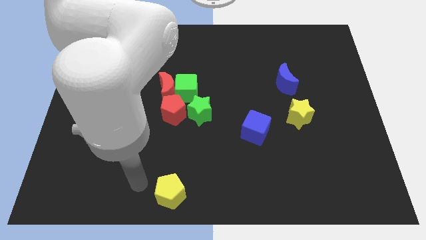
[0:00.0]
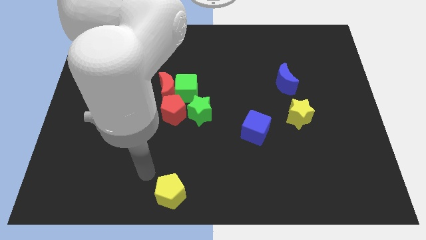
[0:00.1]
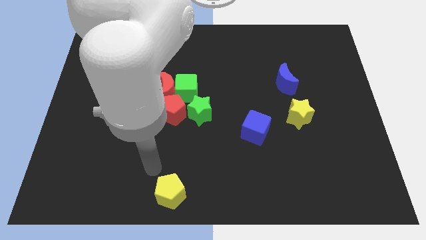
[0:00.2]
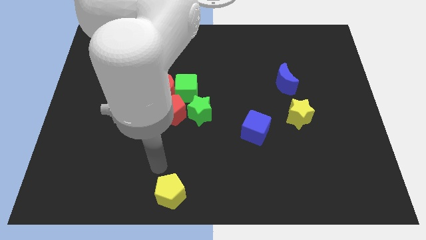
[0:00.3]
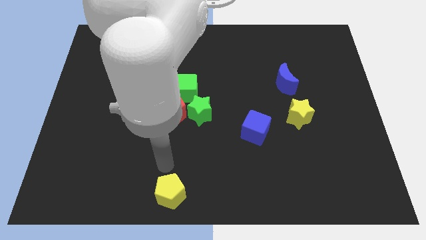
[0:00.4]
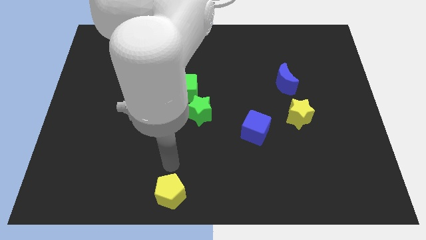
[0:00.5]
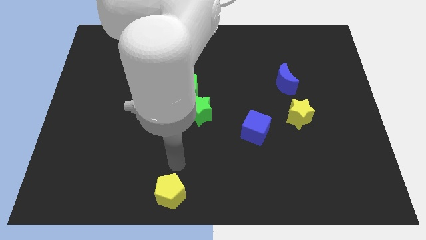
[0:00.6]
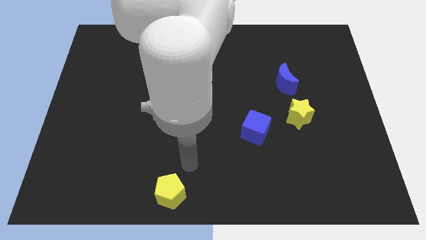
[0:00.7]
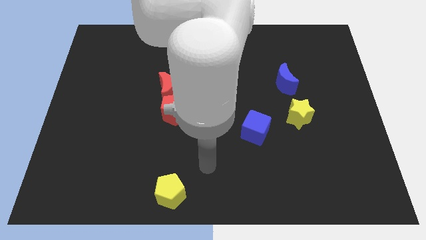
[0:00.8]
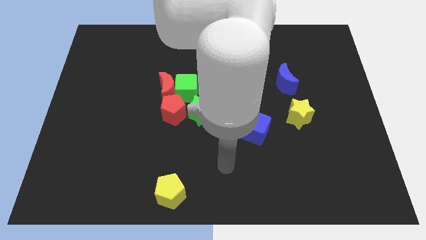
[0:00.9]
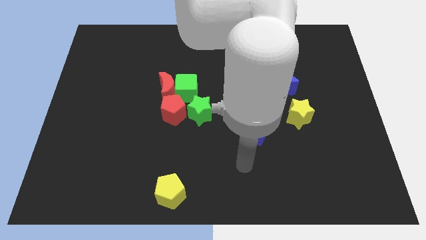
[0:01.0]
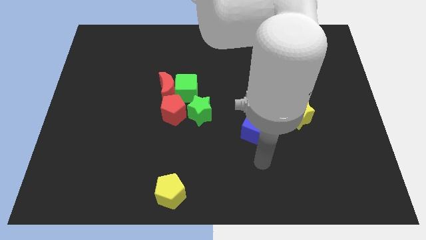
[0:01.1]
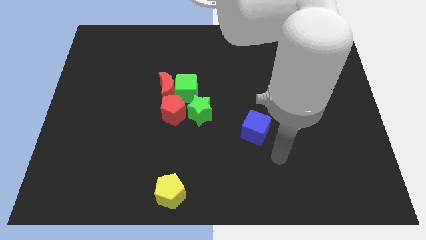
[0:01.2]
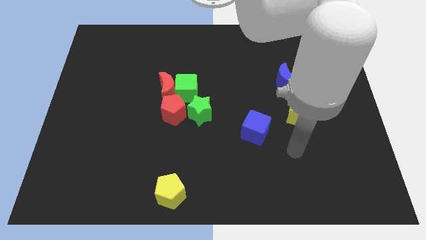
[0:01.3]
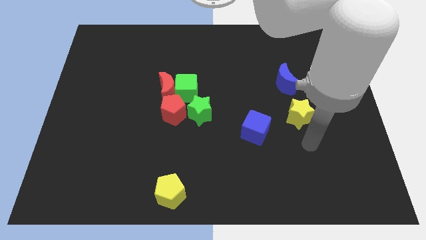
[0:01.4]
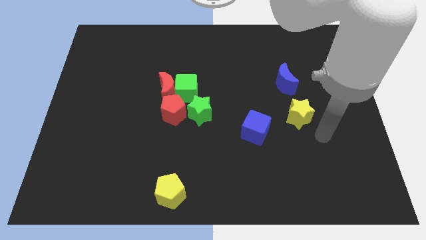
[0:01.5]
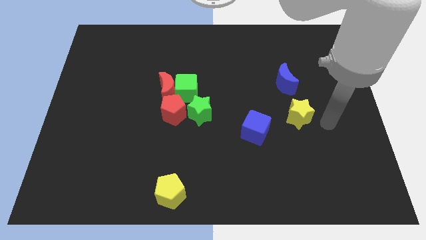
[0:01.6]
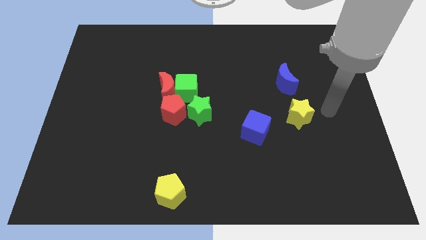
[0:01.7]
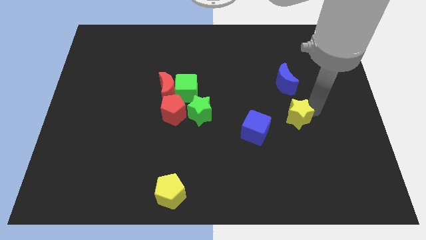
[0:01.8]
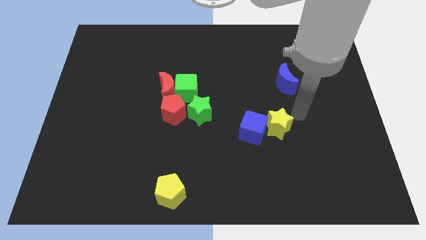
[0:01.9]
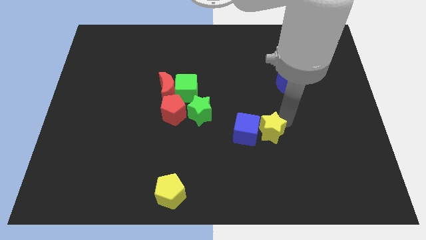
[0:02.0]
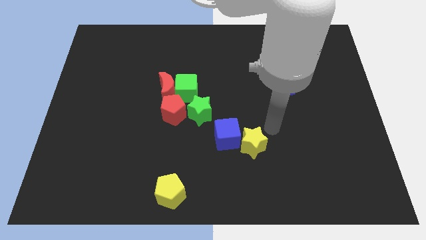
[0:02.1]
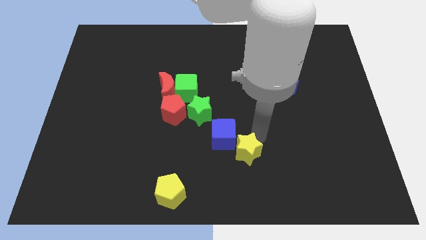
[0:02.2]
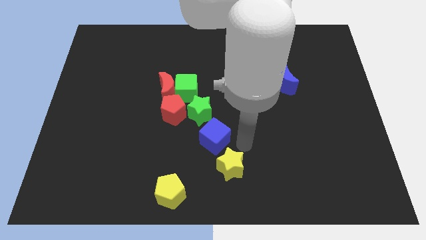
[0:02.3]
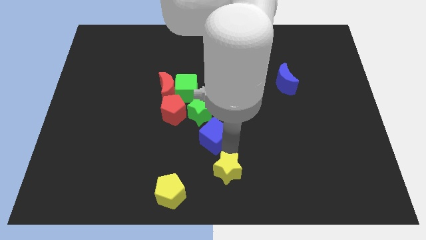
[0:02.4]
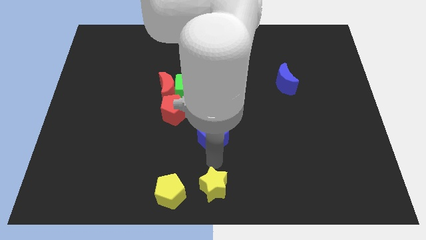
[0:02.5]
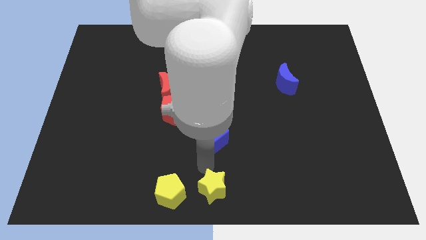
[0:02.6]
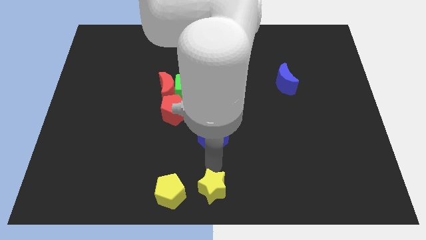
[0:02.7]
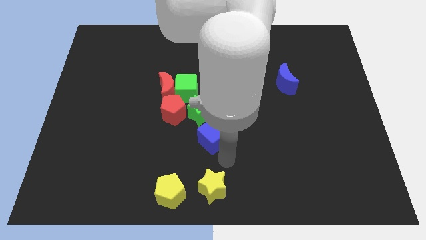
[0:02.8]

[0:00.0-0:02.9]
move the yellow star to the right of the yellow pentagon

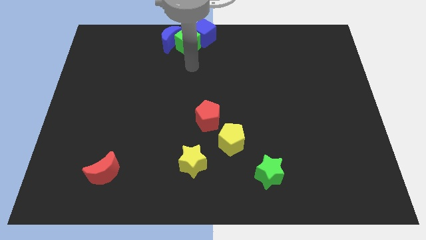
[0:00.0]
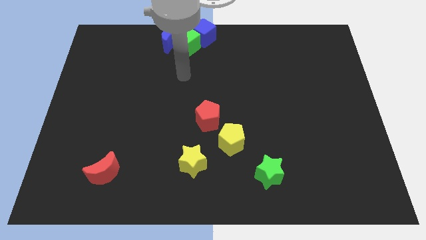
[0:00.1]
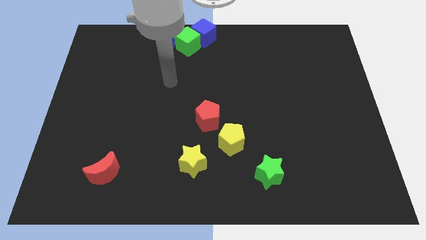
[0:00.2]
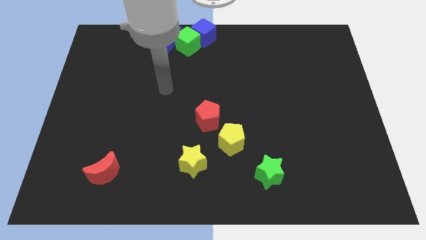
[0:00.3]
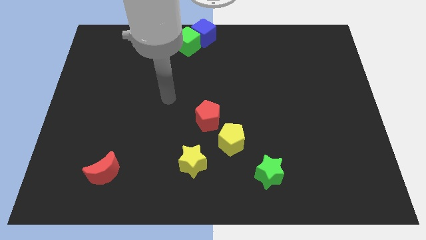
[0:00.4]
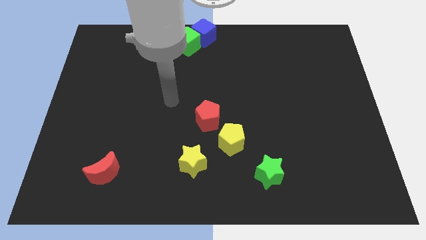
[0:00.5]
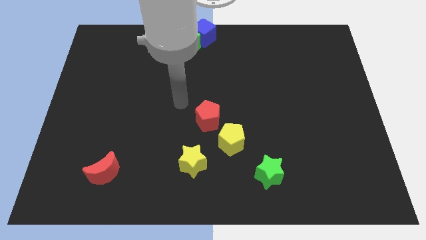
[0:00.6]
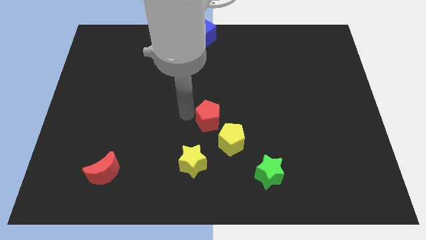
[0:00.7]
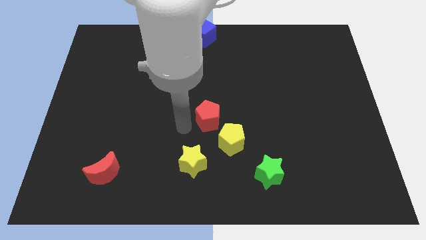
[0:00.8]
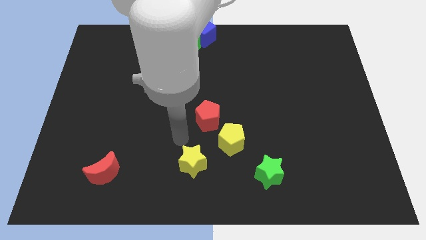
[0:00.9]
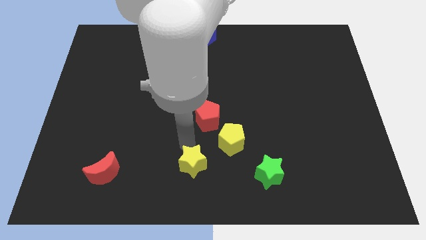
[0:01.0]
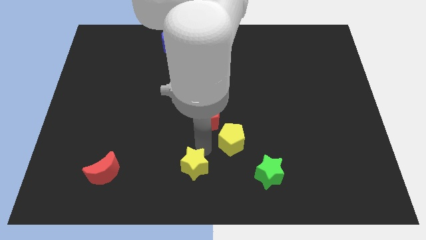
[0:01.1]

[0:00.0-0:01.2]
move the pointer to the top of the yellow star

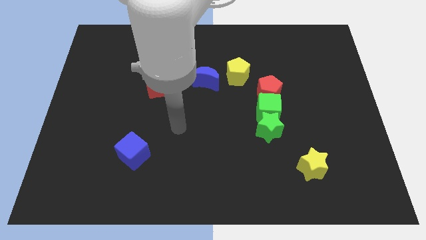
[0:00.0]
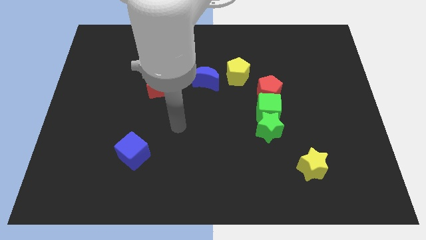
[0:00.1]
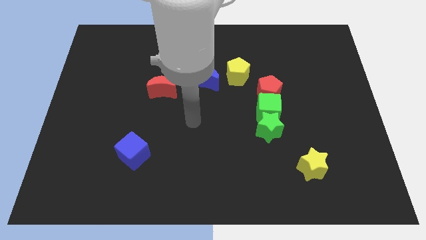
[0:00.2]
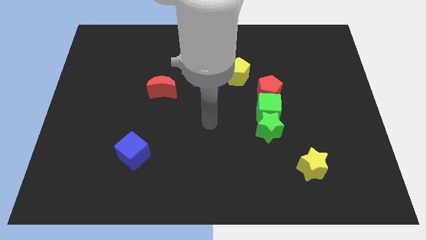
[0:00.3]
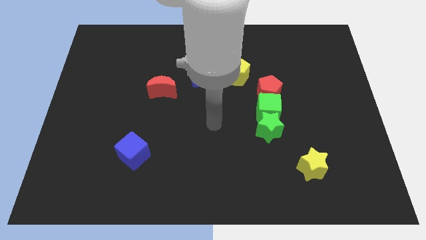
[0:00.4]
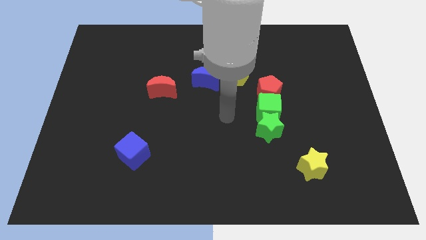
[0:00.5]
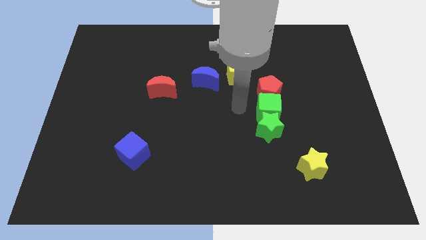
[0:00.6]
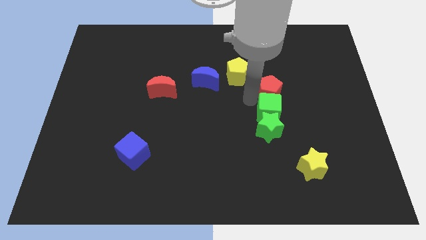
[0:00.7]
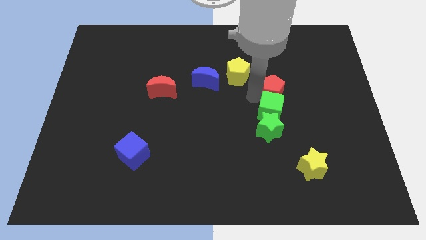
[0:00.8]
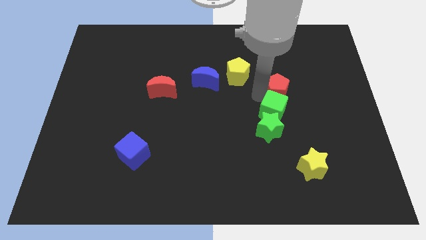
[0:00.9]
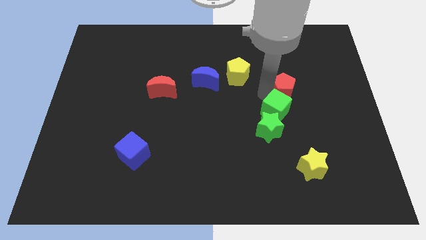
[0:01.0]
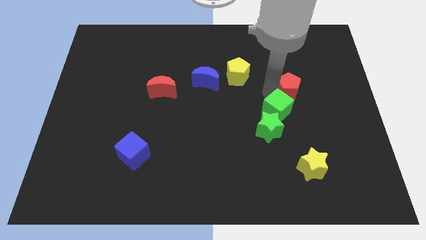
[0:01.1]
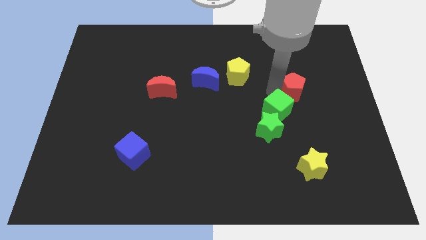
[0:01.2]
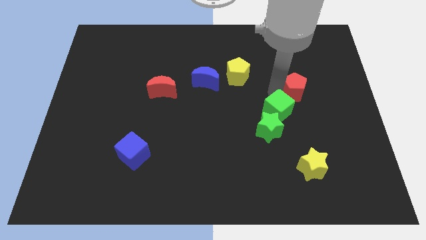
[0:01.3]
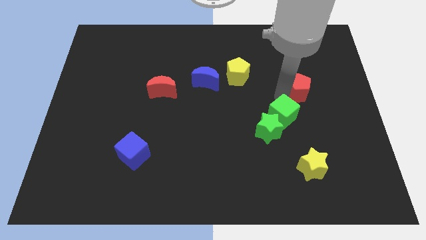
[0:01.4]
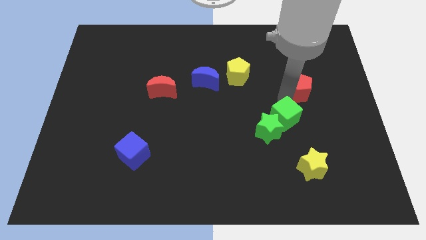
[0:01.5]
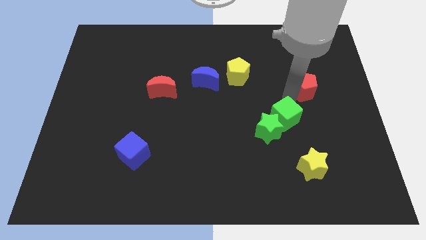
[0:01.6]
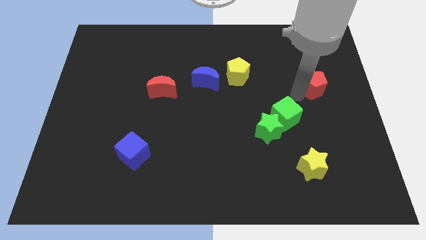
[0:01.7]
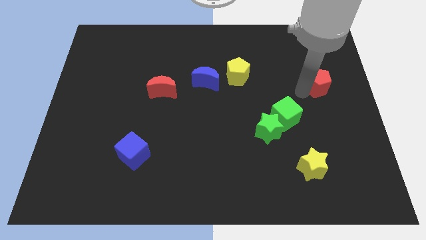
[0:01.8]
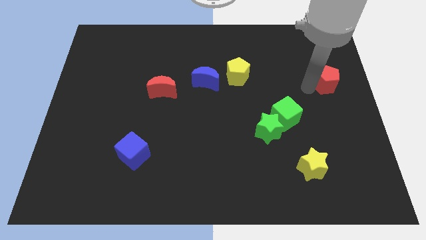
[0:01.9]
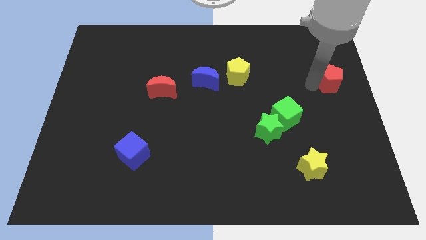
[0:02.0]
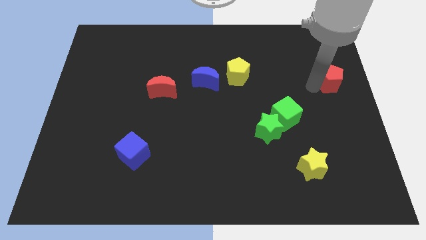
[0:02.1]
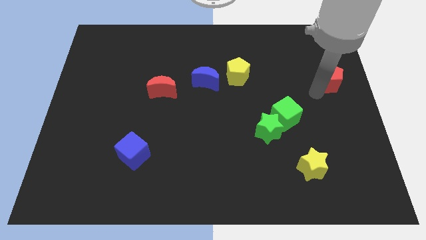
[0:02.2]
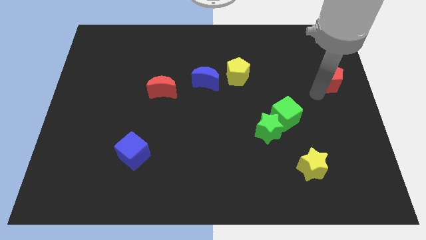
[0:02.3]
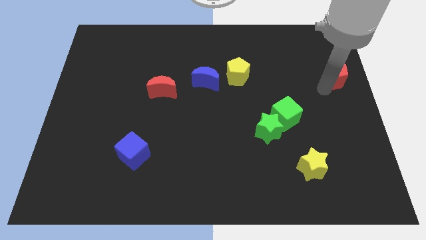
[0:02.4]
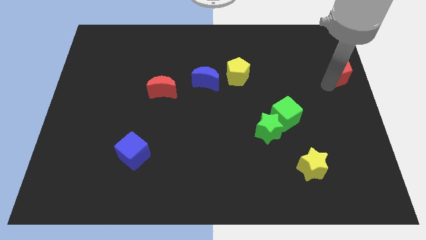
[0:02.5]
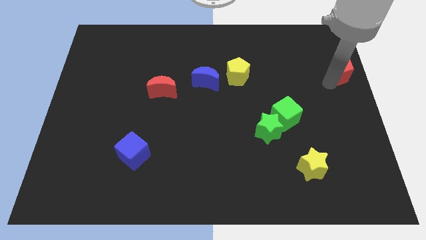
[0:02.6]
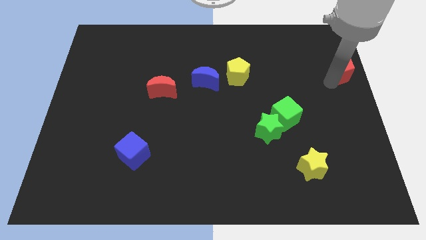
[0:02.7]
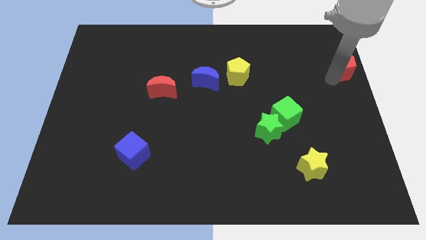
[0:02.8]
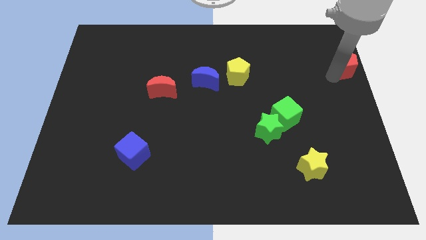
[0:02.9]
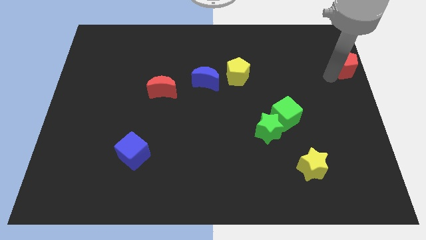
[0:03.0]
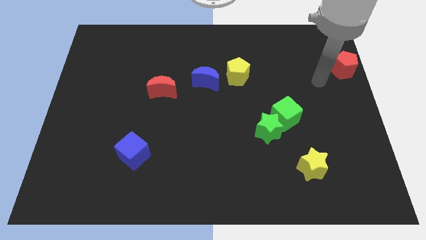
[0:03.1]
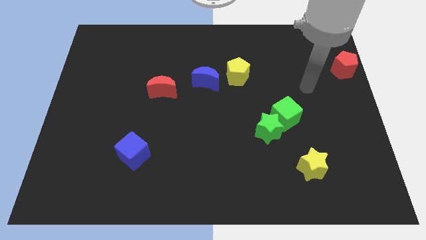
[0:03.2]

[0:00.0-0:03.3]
push the red pentagon towards the top right of the board

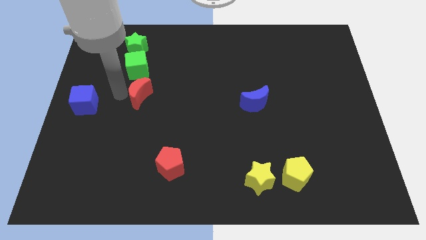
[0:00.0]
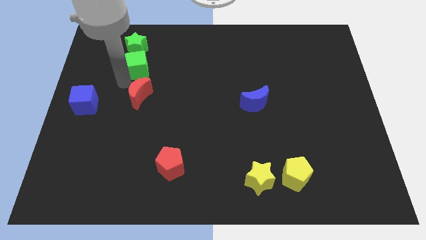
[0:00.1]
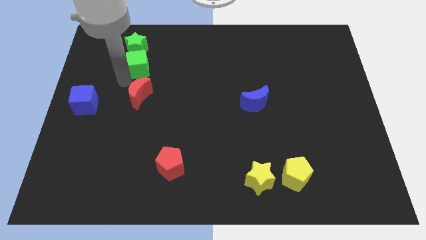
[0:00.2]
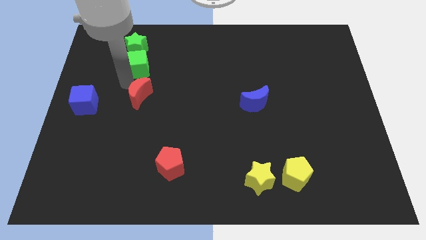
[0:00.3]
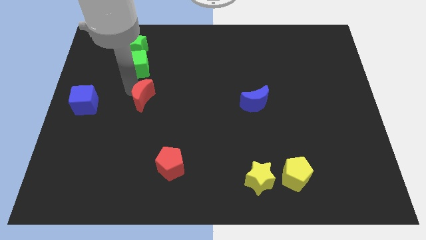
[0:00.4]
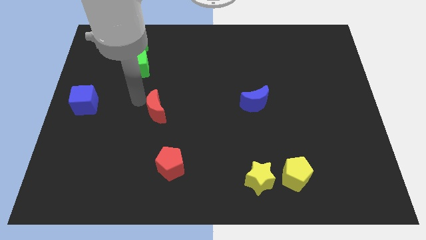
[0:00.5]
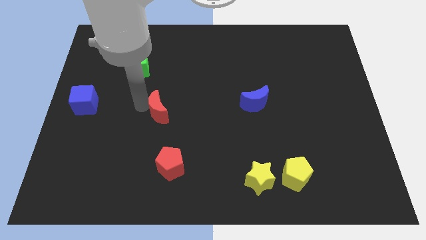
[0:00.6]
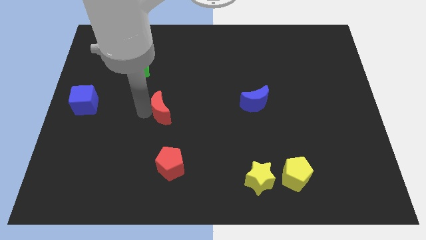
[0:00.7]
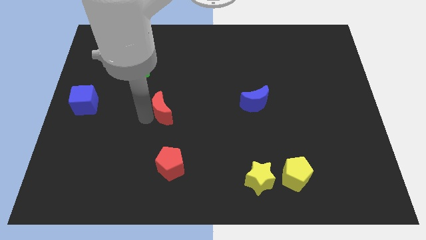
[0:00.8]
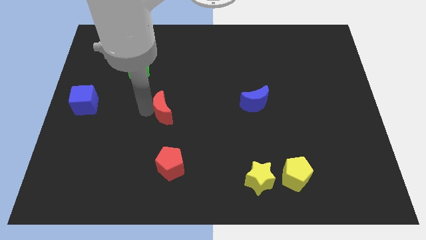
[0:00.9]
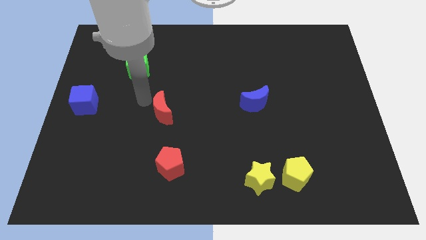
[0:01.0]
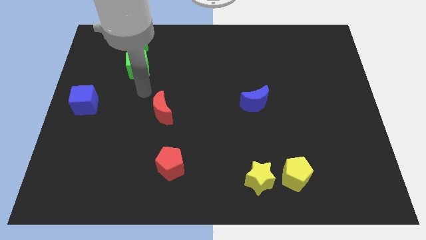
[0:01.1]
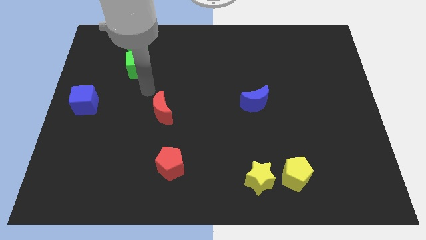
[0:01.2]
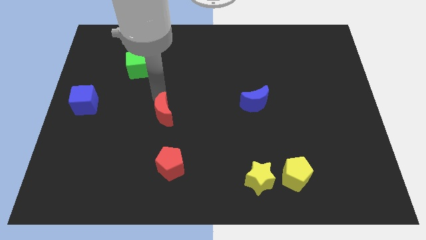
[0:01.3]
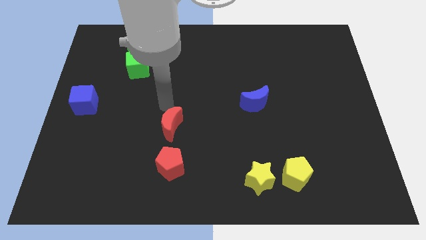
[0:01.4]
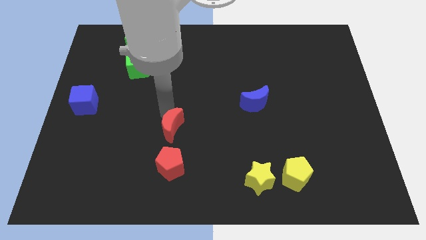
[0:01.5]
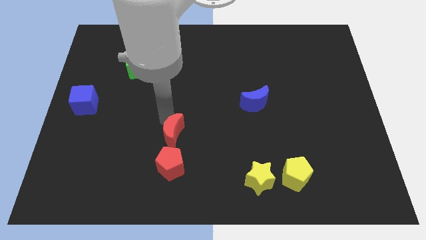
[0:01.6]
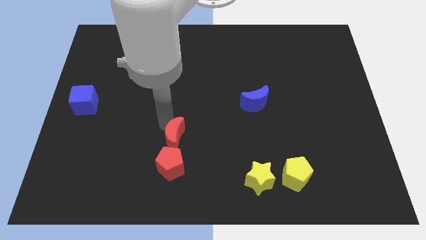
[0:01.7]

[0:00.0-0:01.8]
push the red crescent above the red pentagon
